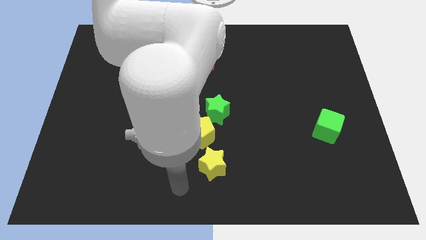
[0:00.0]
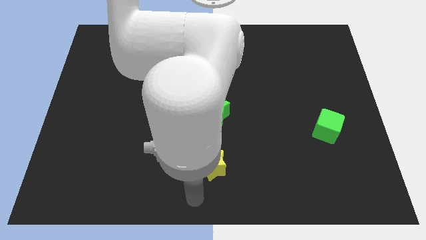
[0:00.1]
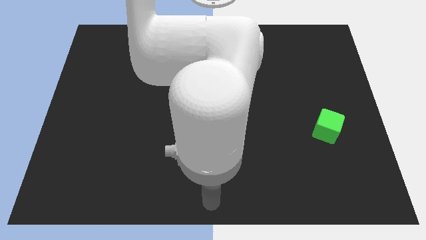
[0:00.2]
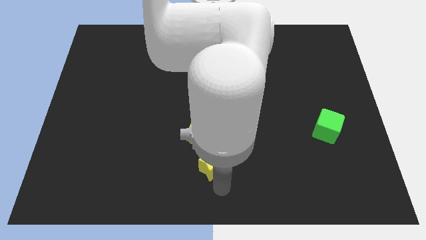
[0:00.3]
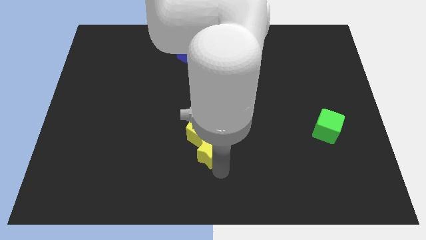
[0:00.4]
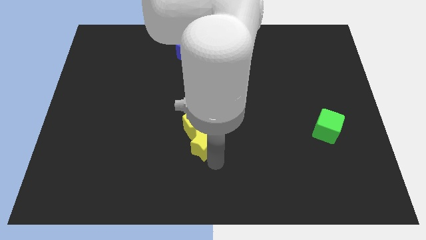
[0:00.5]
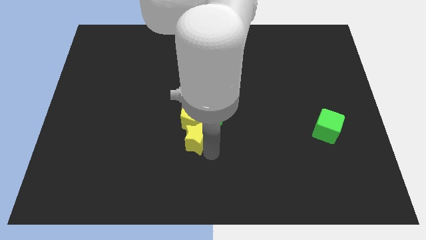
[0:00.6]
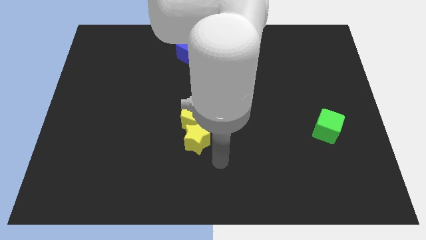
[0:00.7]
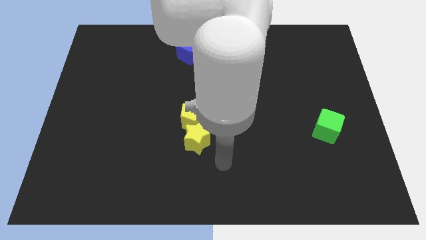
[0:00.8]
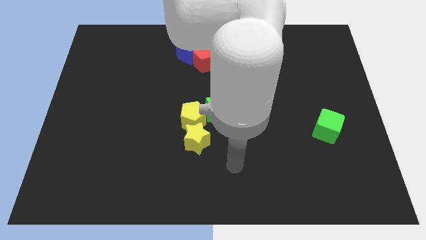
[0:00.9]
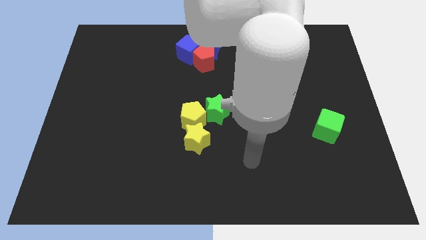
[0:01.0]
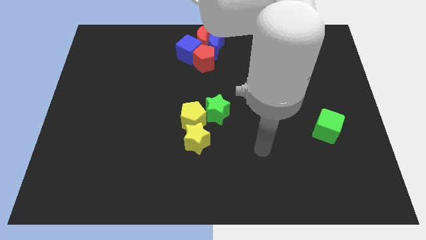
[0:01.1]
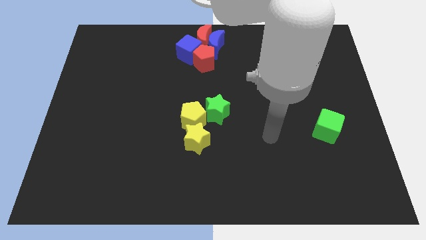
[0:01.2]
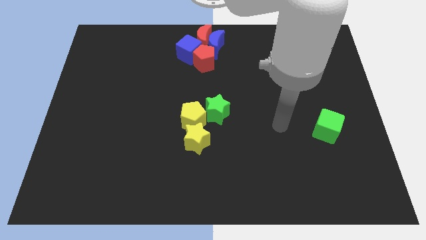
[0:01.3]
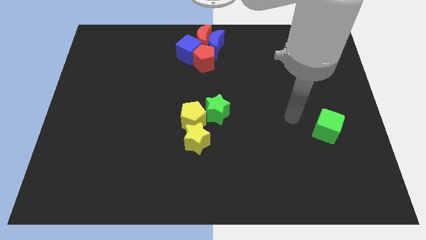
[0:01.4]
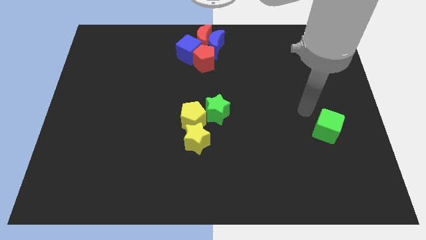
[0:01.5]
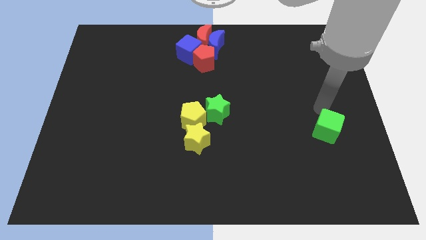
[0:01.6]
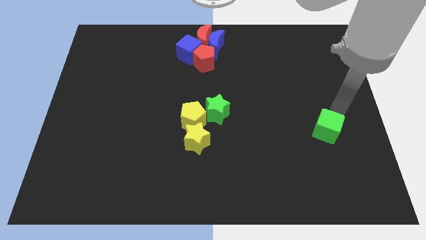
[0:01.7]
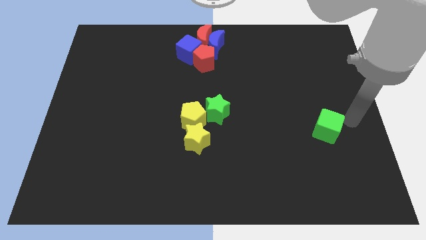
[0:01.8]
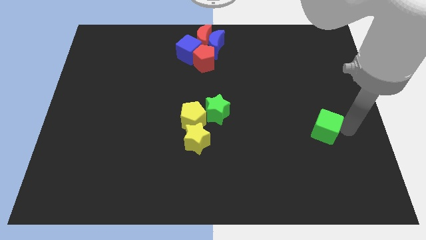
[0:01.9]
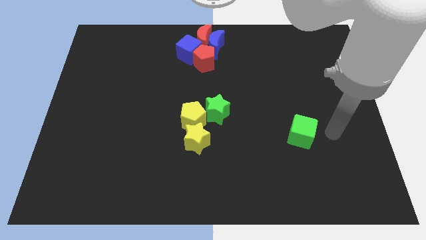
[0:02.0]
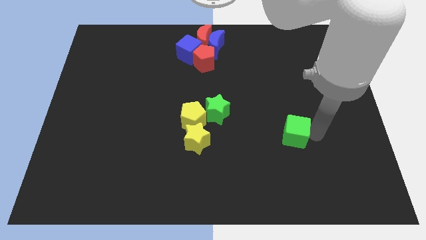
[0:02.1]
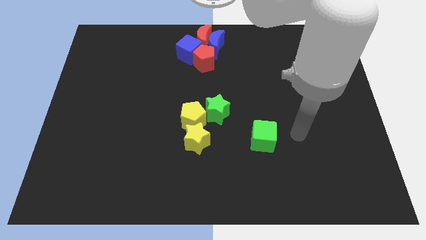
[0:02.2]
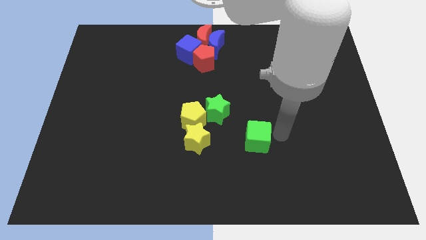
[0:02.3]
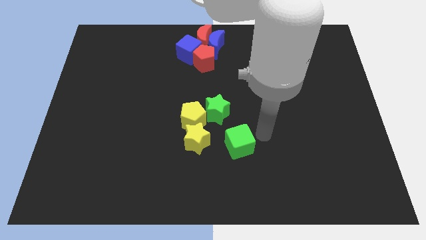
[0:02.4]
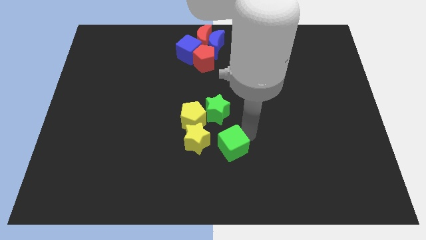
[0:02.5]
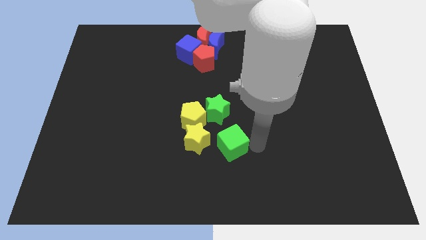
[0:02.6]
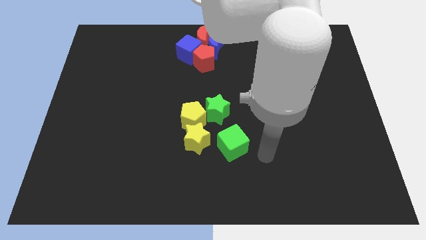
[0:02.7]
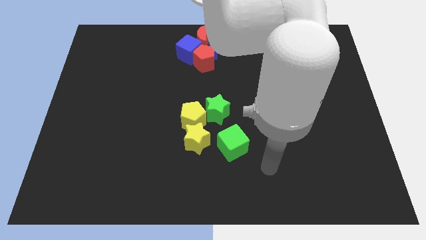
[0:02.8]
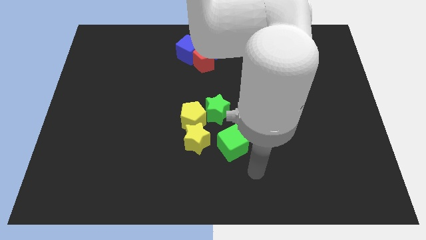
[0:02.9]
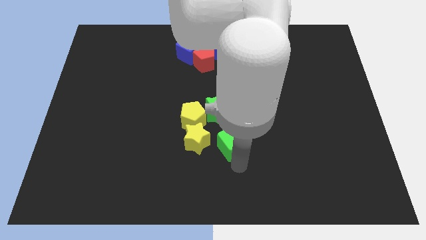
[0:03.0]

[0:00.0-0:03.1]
move the green cube vertically to the green star

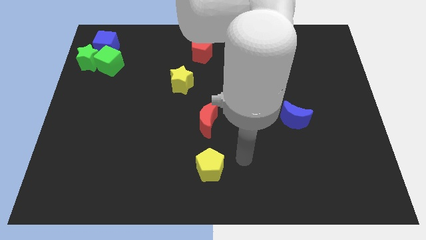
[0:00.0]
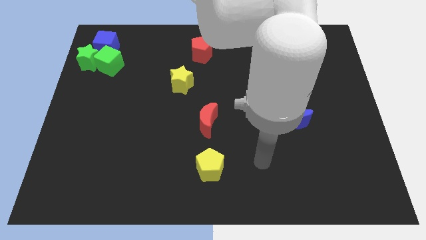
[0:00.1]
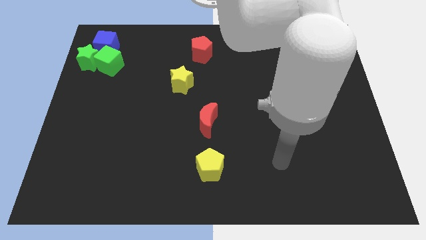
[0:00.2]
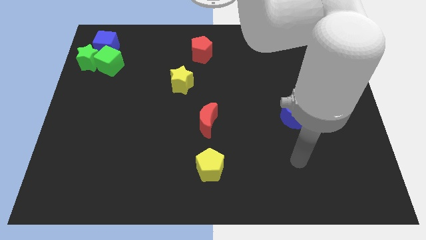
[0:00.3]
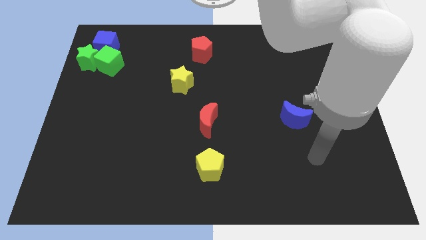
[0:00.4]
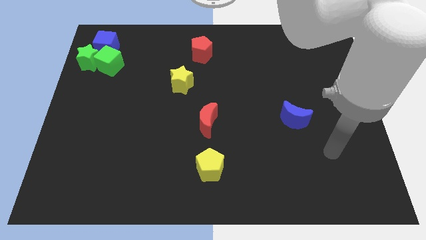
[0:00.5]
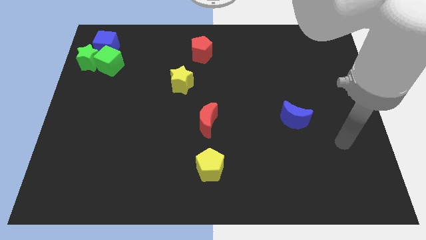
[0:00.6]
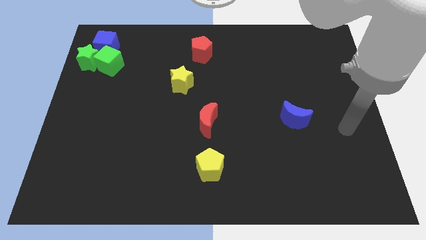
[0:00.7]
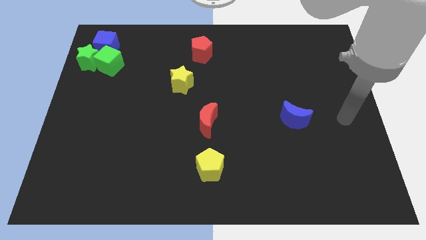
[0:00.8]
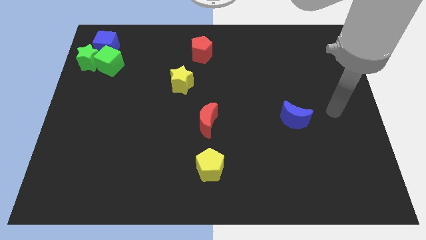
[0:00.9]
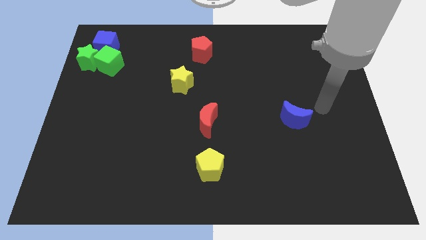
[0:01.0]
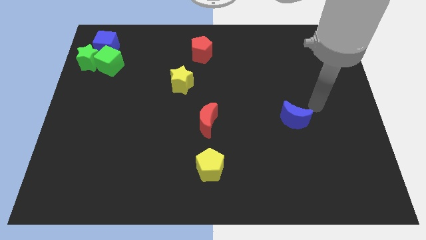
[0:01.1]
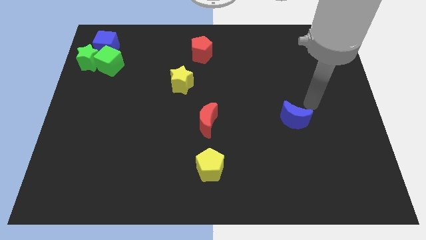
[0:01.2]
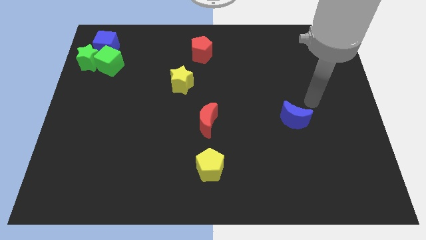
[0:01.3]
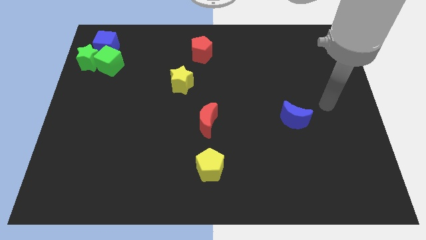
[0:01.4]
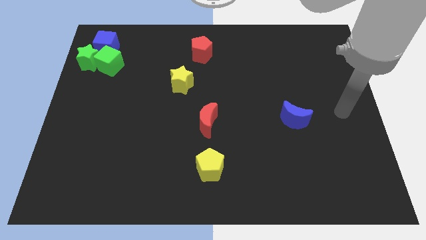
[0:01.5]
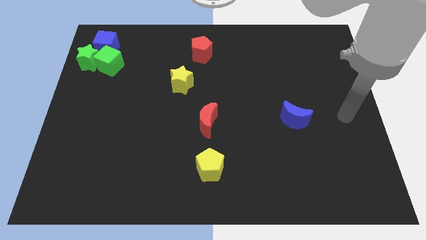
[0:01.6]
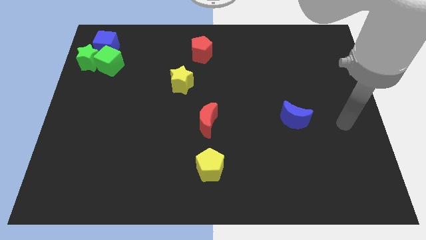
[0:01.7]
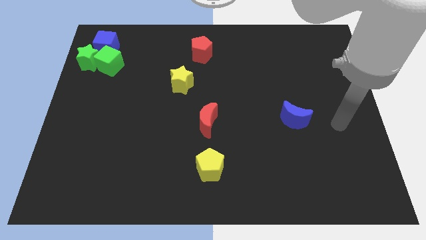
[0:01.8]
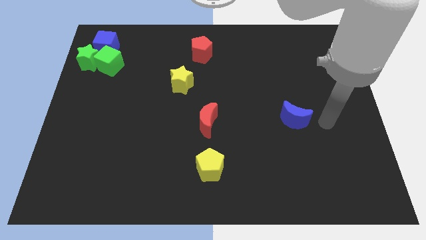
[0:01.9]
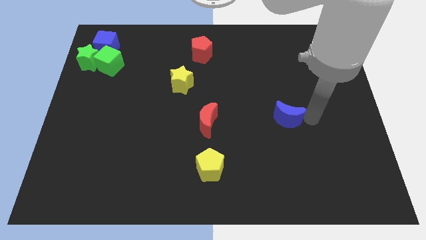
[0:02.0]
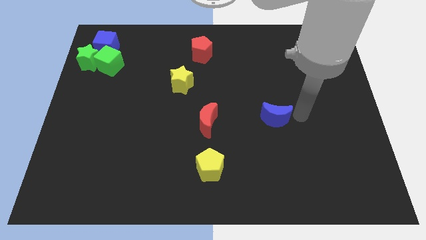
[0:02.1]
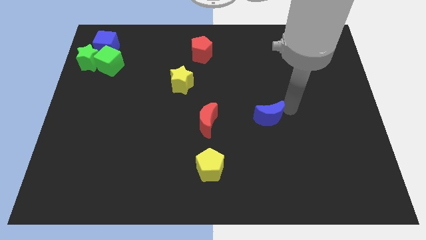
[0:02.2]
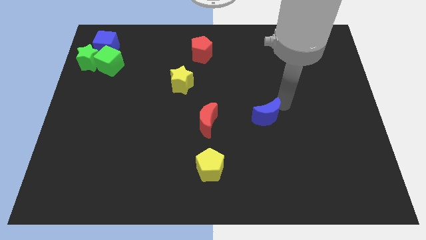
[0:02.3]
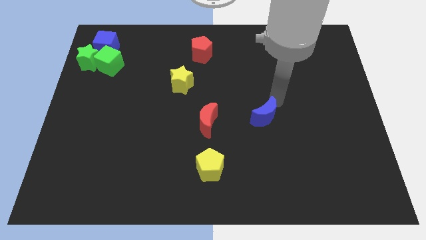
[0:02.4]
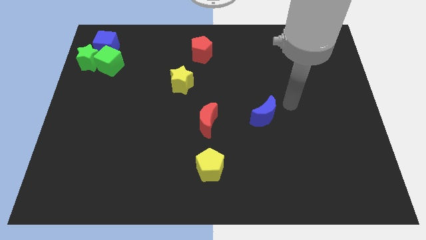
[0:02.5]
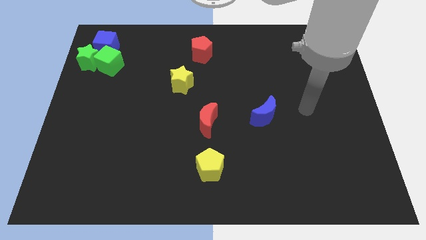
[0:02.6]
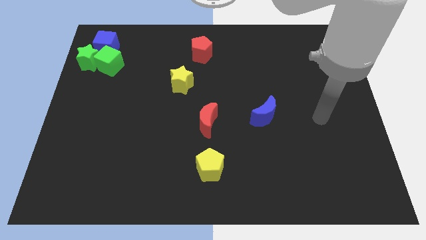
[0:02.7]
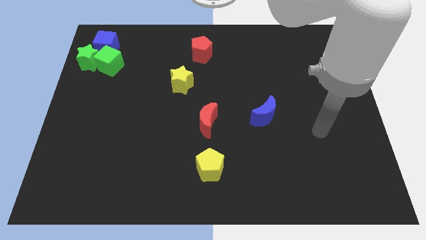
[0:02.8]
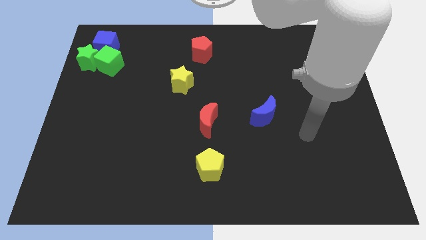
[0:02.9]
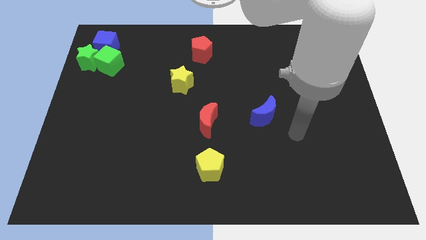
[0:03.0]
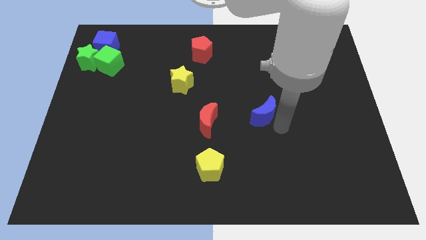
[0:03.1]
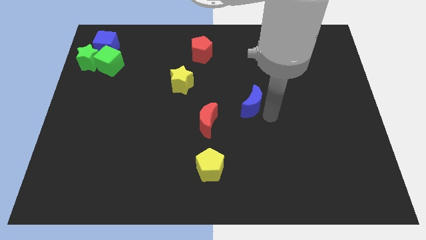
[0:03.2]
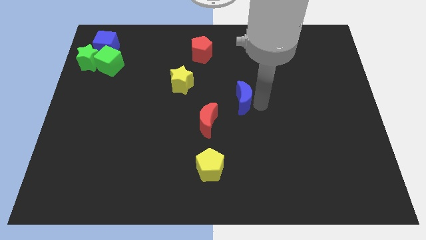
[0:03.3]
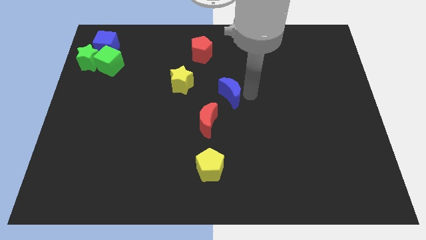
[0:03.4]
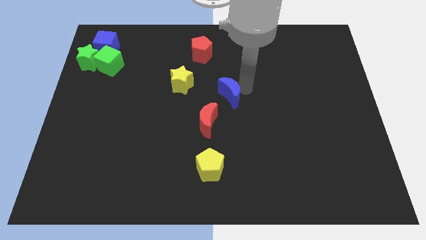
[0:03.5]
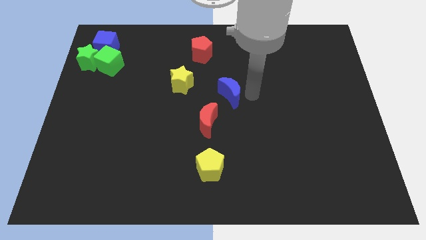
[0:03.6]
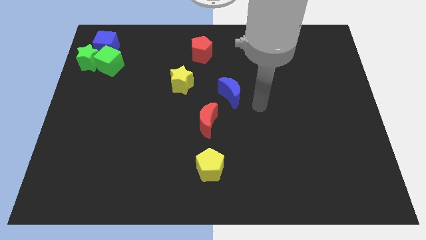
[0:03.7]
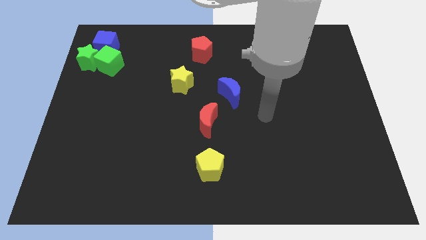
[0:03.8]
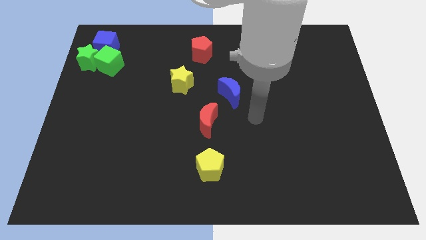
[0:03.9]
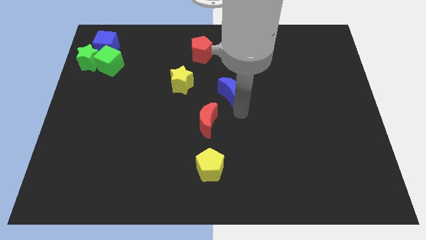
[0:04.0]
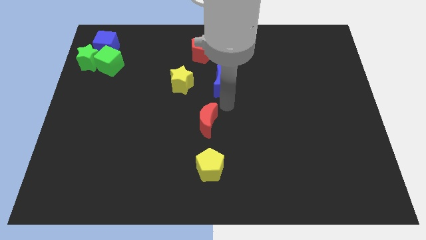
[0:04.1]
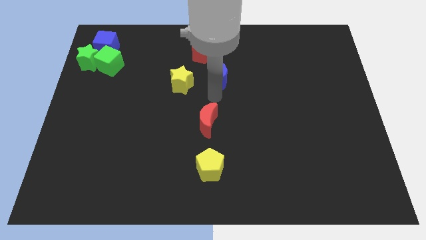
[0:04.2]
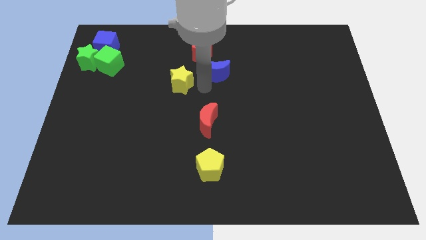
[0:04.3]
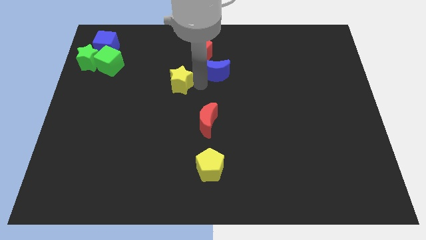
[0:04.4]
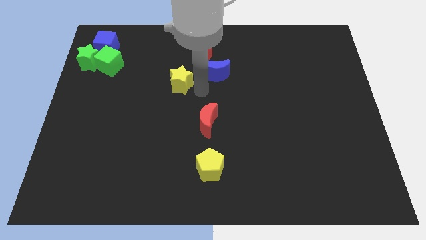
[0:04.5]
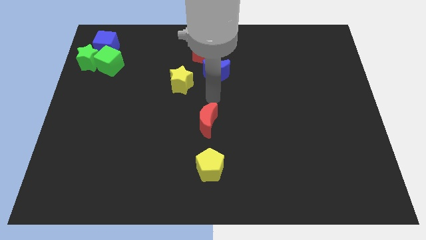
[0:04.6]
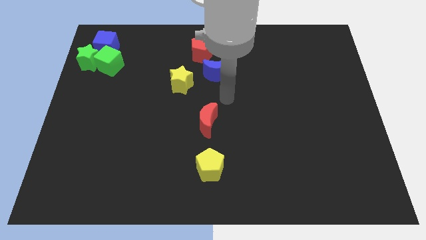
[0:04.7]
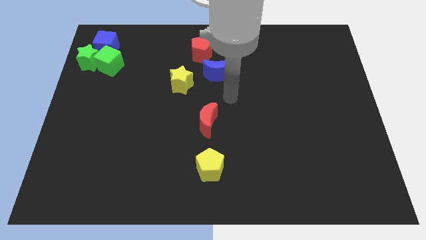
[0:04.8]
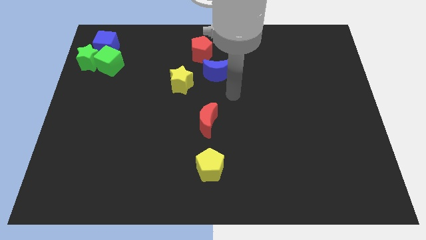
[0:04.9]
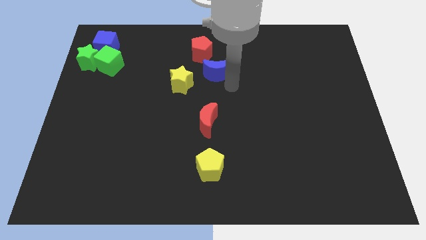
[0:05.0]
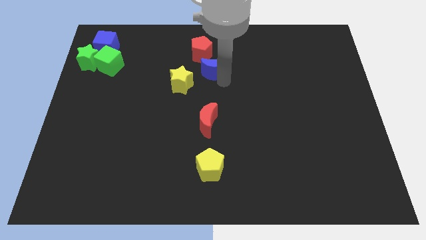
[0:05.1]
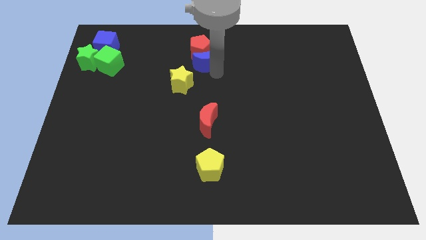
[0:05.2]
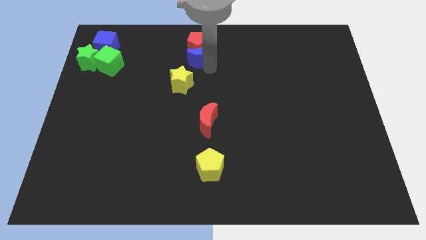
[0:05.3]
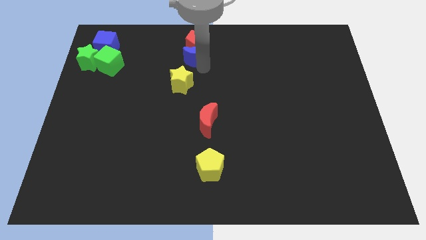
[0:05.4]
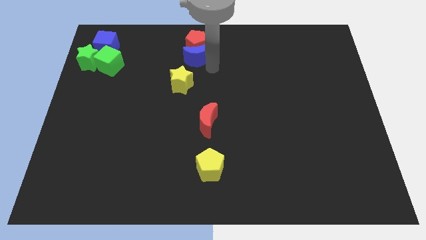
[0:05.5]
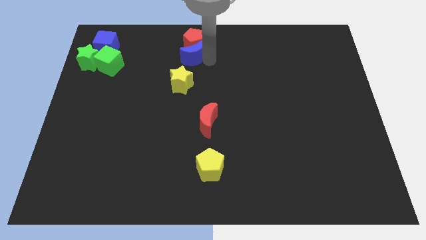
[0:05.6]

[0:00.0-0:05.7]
move the blue crescent into the red pentagon

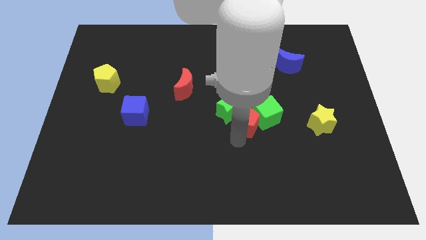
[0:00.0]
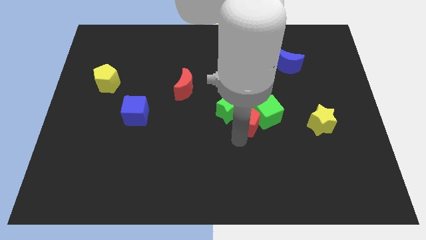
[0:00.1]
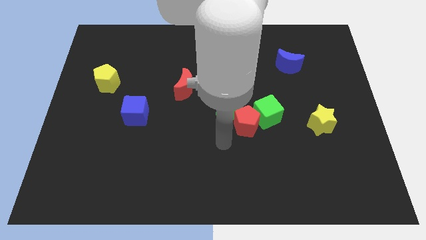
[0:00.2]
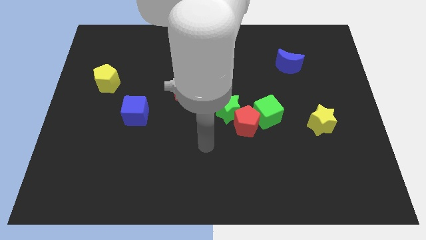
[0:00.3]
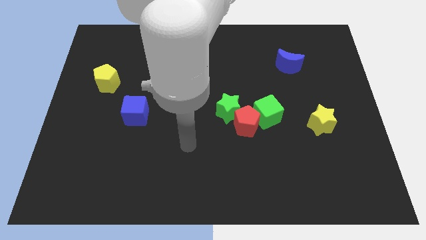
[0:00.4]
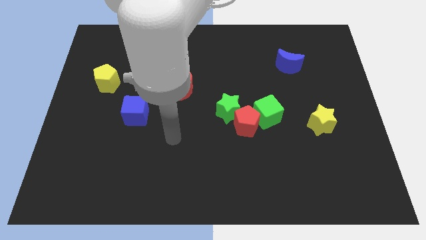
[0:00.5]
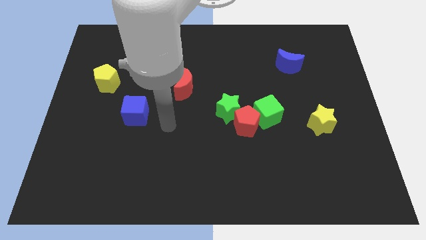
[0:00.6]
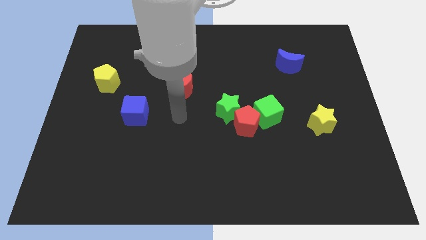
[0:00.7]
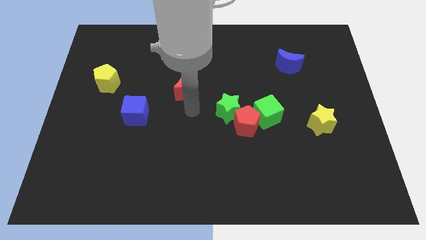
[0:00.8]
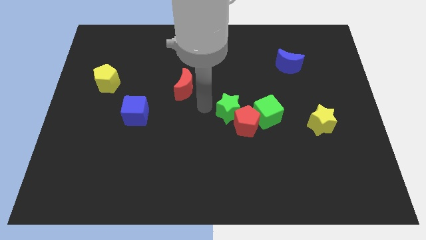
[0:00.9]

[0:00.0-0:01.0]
move away from the red pentagon
